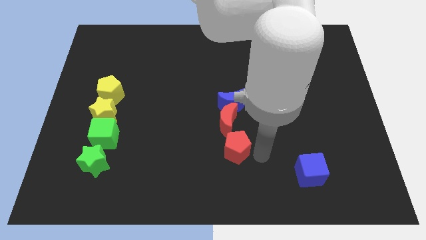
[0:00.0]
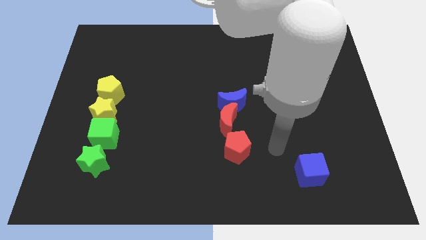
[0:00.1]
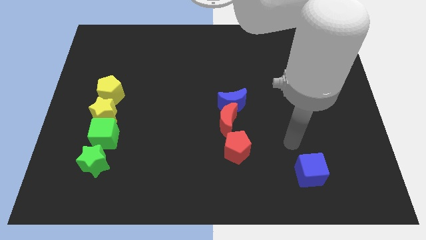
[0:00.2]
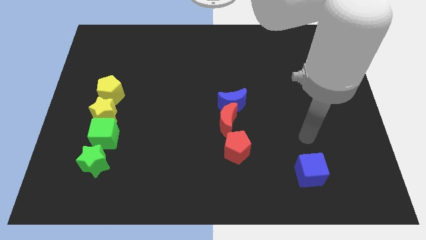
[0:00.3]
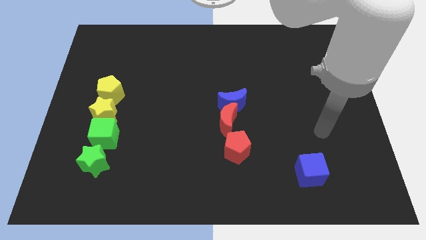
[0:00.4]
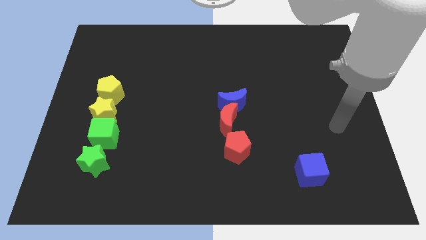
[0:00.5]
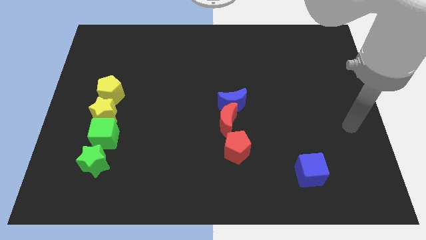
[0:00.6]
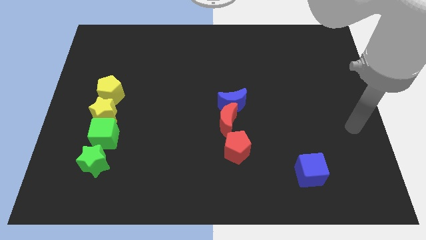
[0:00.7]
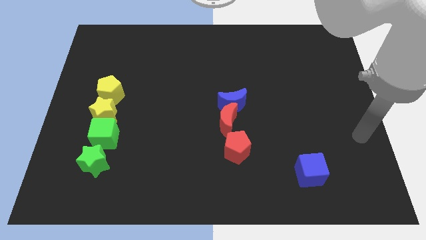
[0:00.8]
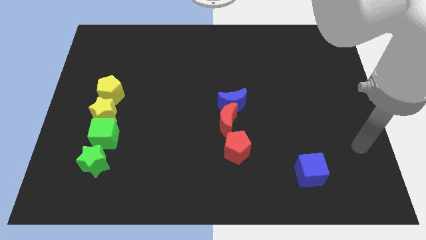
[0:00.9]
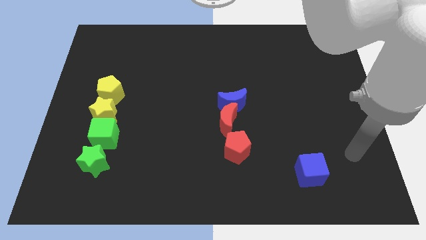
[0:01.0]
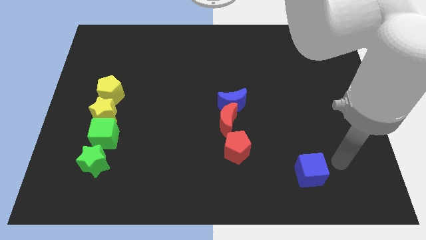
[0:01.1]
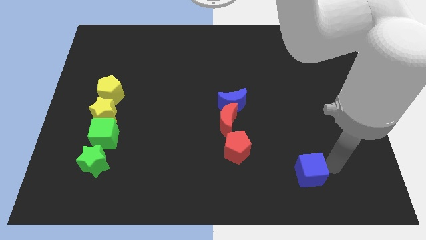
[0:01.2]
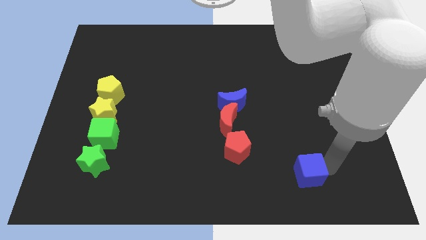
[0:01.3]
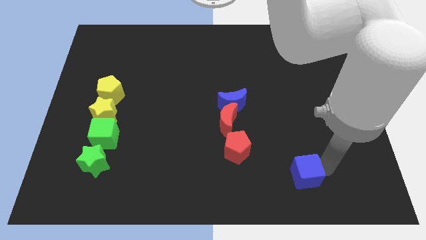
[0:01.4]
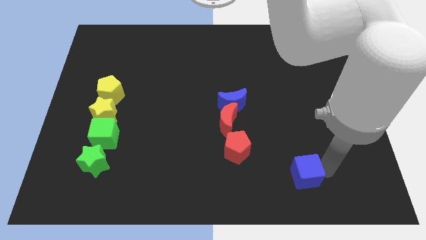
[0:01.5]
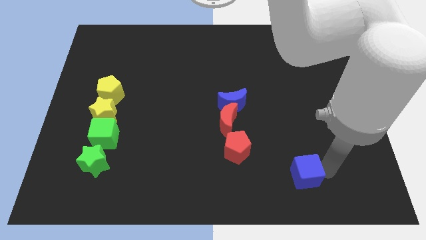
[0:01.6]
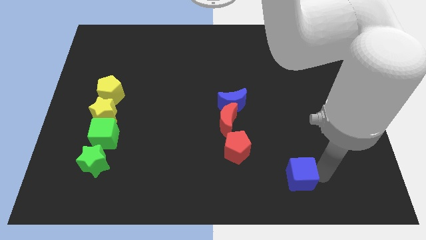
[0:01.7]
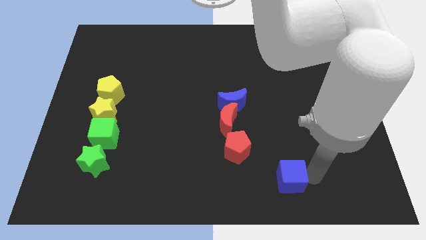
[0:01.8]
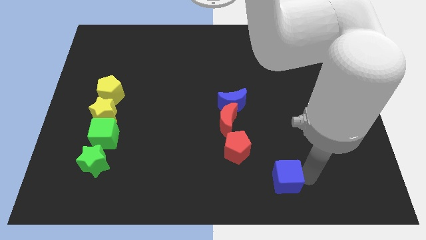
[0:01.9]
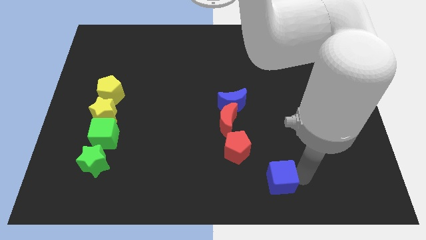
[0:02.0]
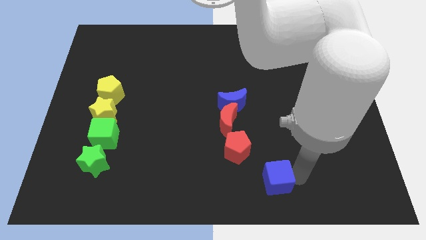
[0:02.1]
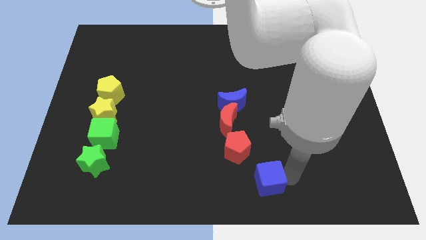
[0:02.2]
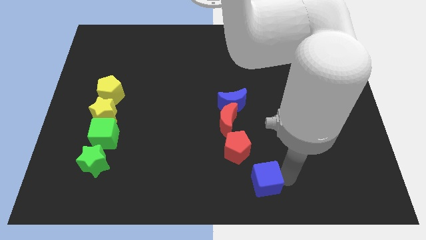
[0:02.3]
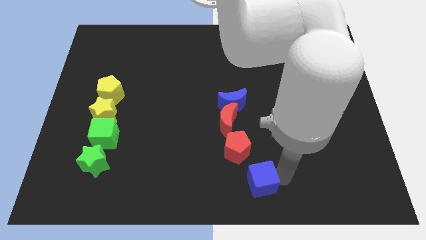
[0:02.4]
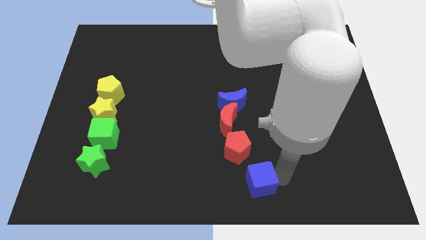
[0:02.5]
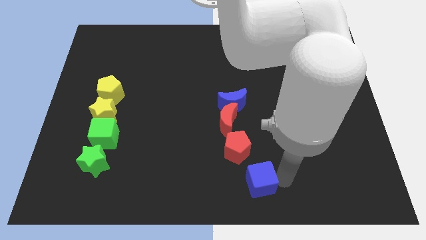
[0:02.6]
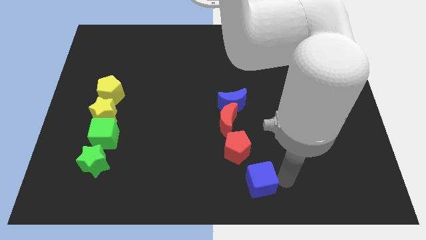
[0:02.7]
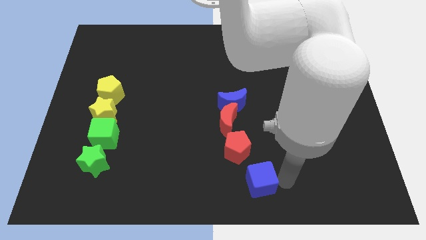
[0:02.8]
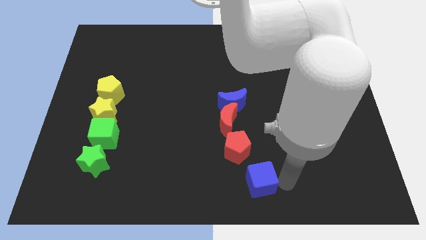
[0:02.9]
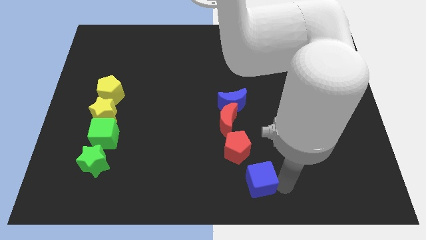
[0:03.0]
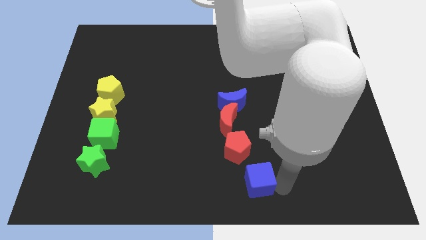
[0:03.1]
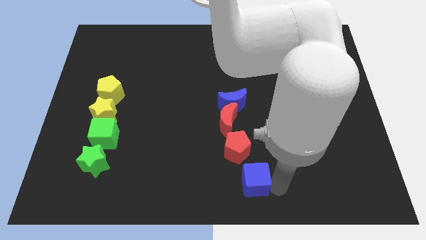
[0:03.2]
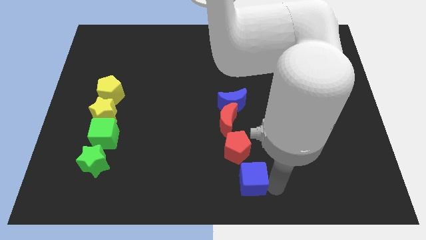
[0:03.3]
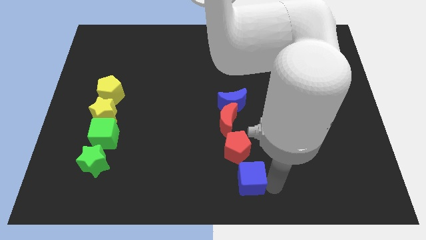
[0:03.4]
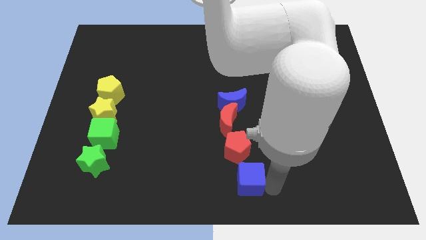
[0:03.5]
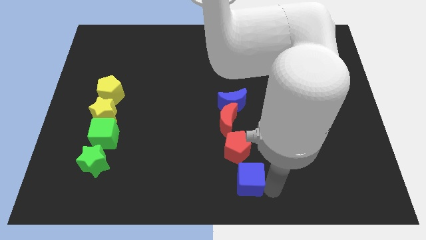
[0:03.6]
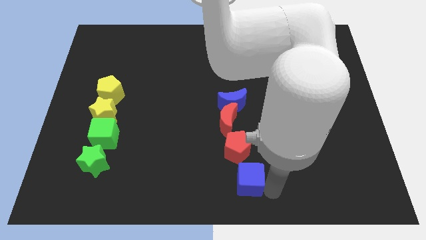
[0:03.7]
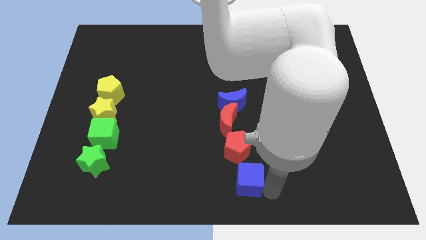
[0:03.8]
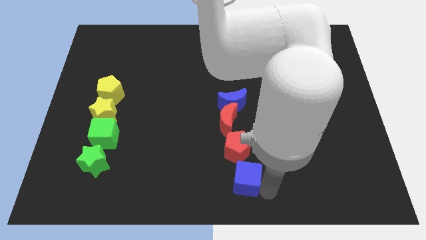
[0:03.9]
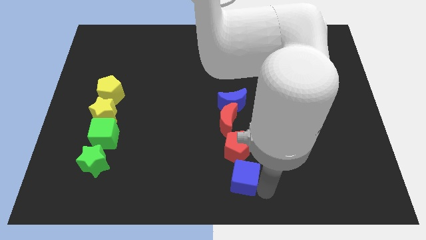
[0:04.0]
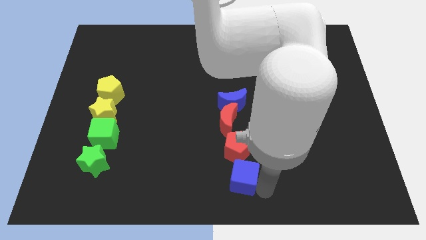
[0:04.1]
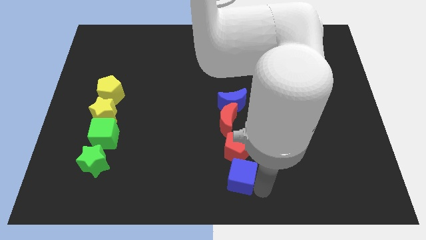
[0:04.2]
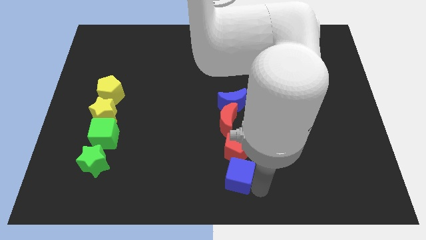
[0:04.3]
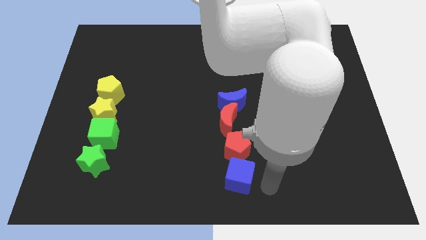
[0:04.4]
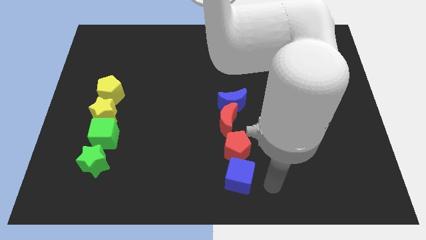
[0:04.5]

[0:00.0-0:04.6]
move the blue cube to the bottom side of the red pentagon

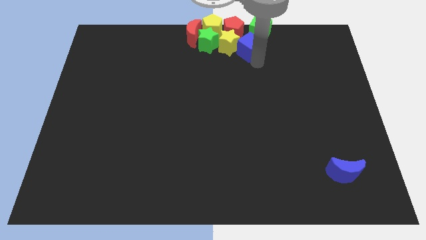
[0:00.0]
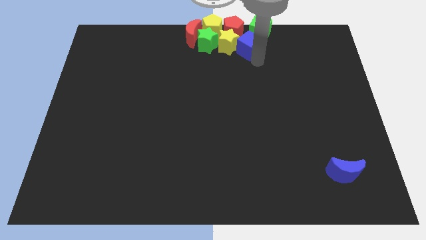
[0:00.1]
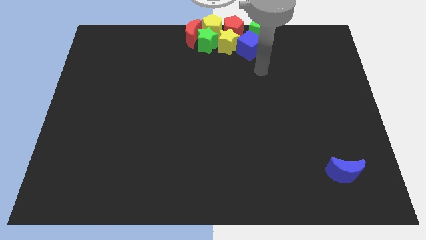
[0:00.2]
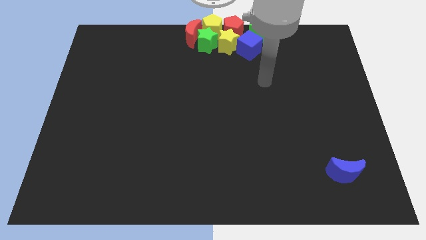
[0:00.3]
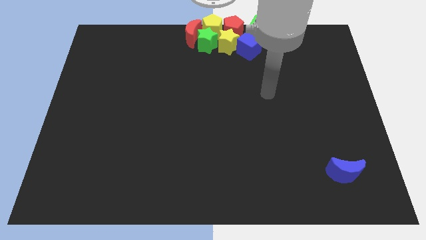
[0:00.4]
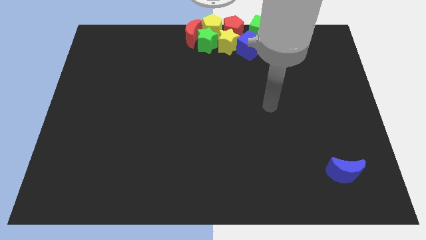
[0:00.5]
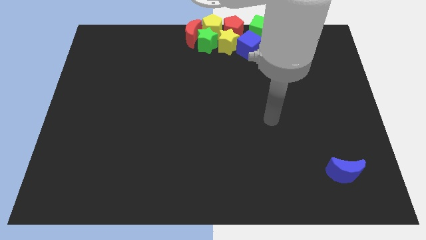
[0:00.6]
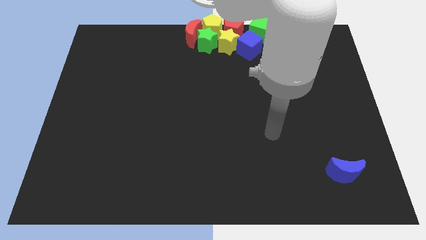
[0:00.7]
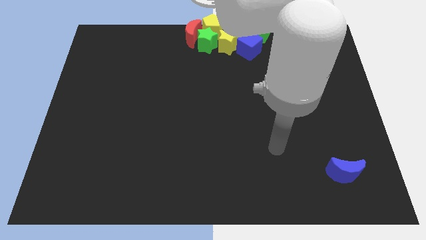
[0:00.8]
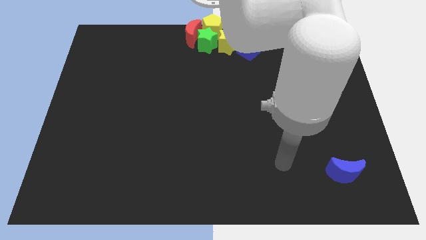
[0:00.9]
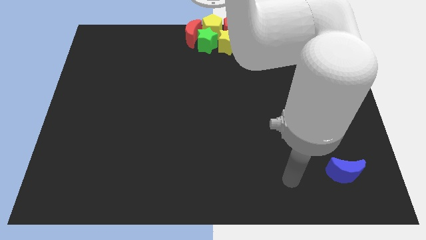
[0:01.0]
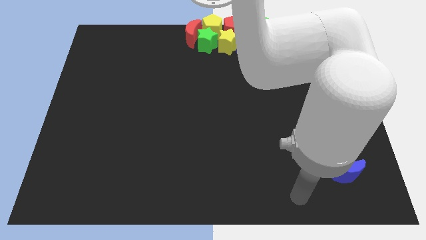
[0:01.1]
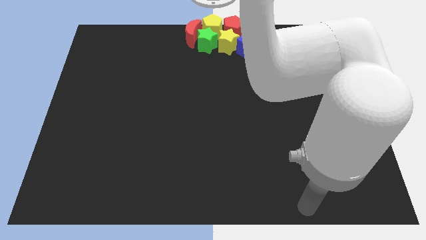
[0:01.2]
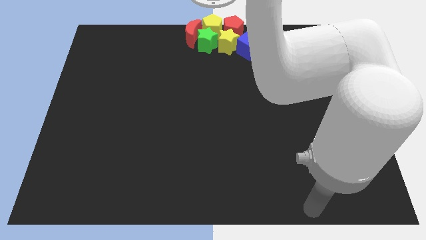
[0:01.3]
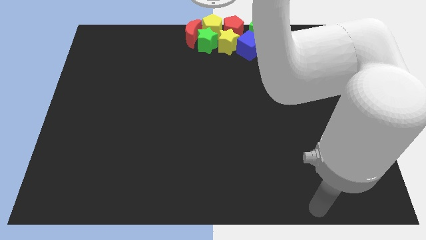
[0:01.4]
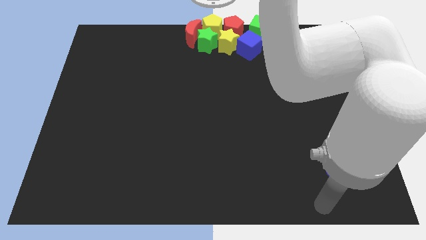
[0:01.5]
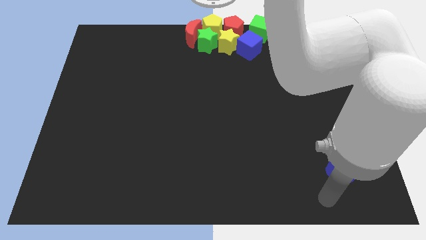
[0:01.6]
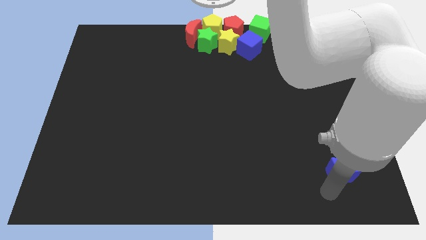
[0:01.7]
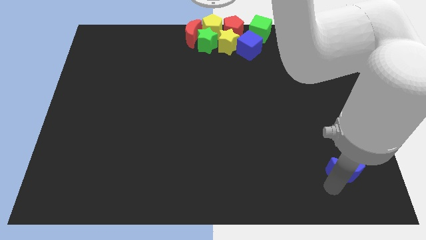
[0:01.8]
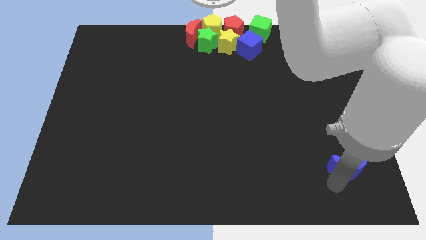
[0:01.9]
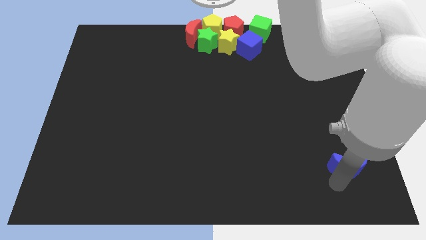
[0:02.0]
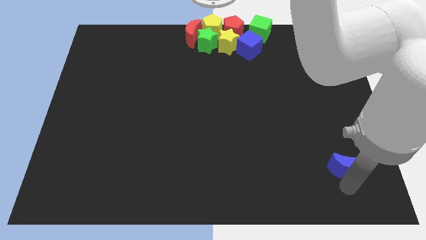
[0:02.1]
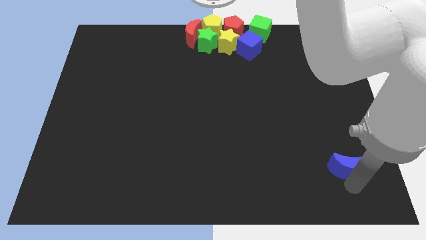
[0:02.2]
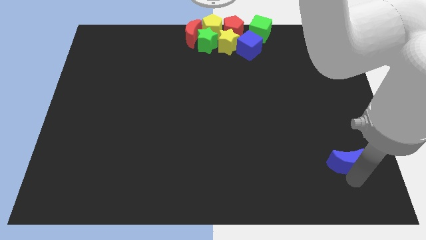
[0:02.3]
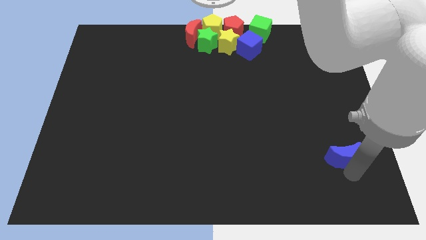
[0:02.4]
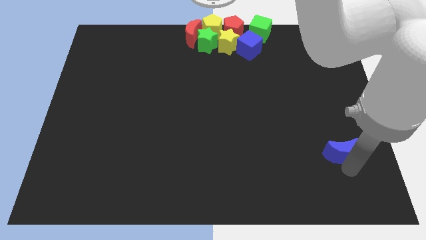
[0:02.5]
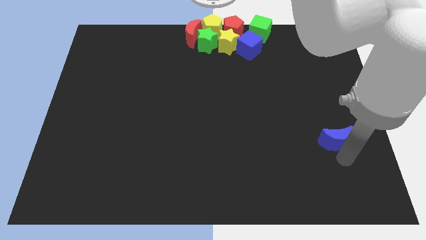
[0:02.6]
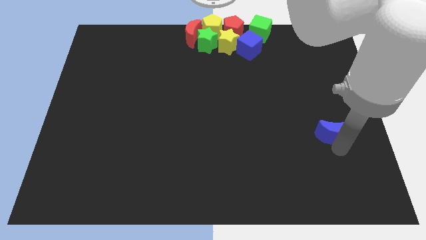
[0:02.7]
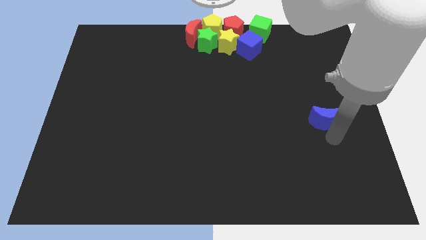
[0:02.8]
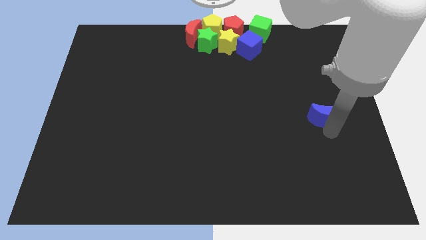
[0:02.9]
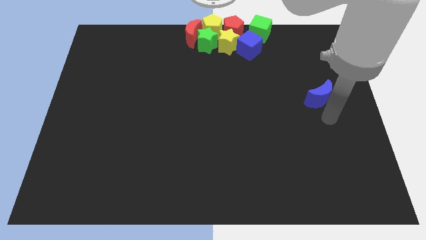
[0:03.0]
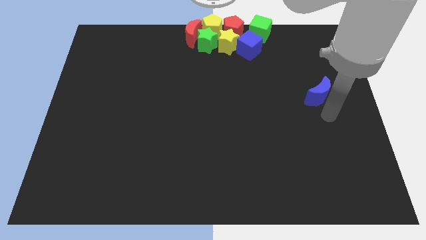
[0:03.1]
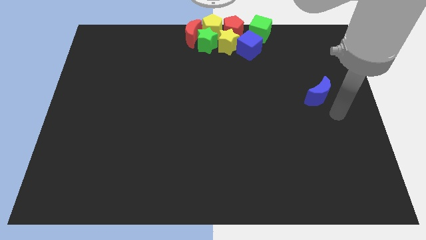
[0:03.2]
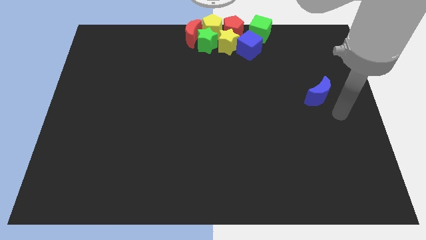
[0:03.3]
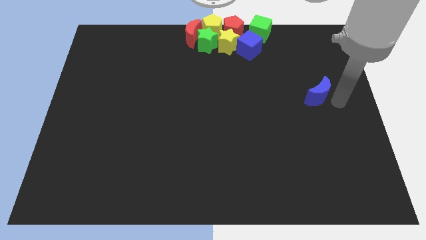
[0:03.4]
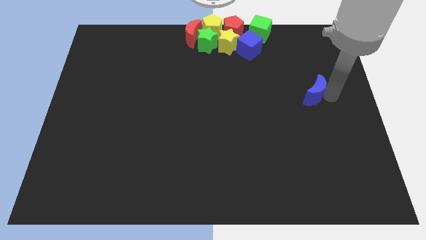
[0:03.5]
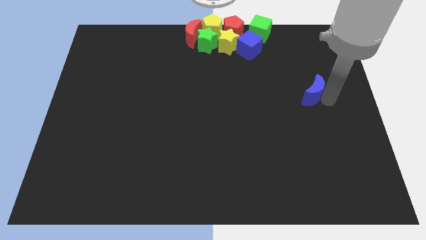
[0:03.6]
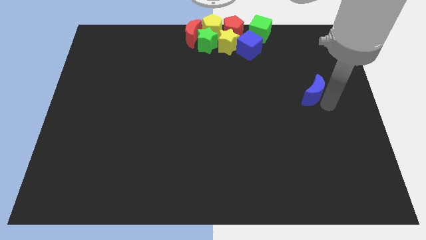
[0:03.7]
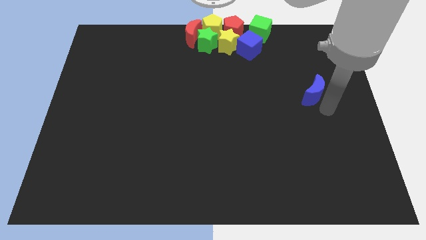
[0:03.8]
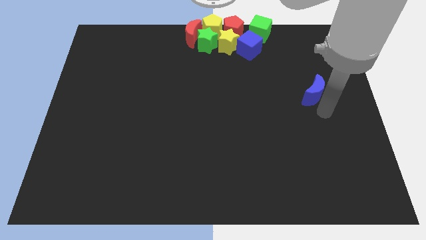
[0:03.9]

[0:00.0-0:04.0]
put the blue moon diagonally bottom right to the blue cube

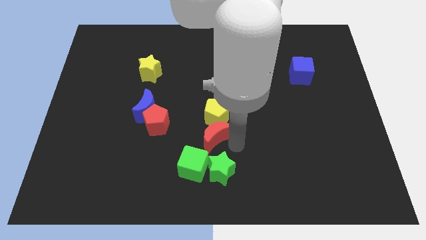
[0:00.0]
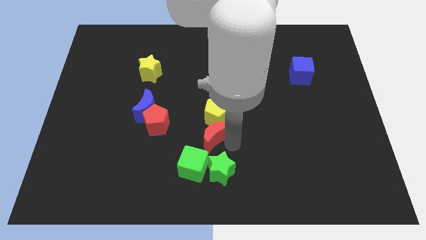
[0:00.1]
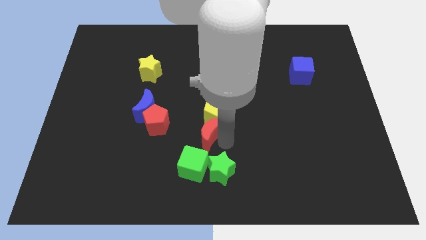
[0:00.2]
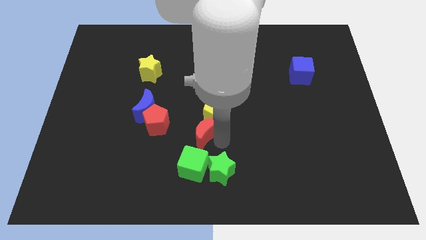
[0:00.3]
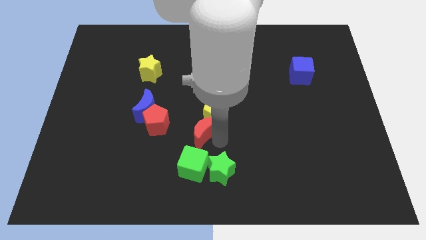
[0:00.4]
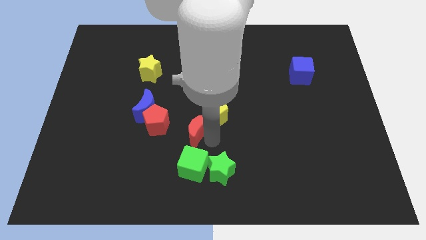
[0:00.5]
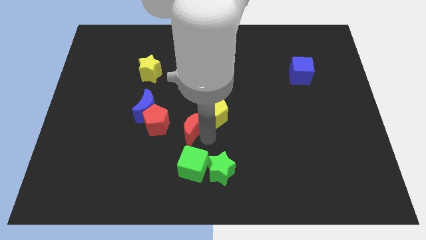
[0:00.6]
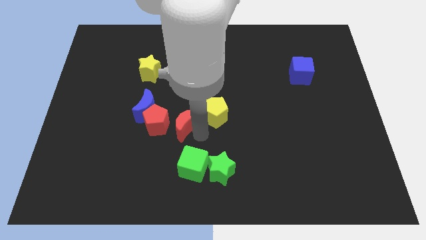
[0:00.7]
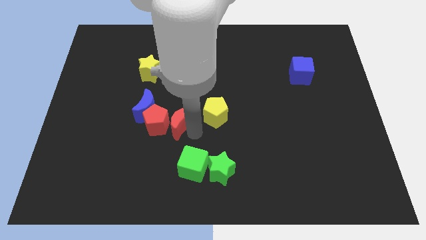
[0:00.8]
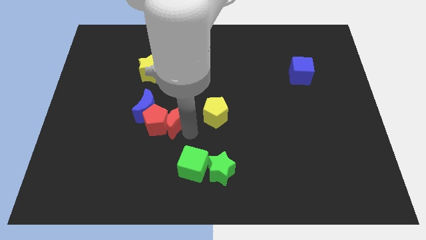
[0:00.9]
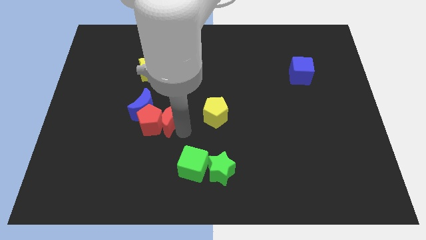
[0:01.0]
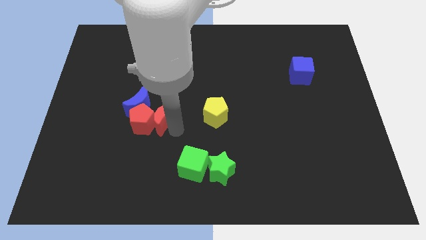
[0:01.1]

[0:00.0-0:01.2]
move the red moon into the red pentagon
